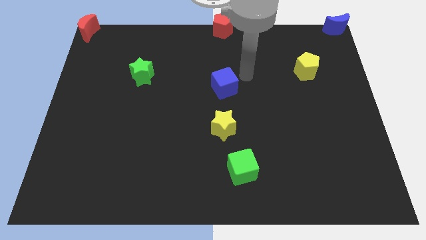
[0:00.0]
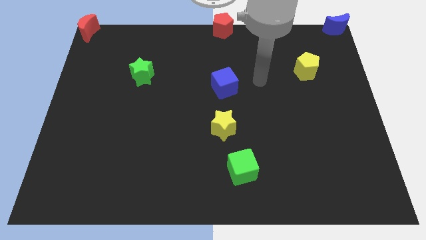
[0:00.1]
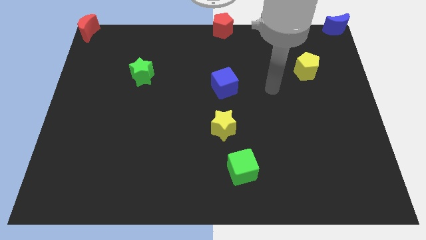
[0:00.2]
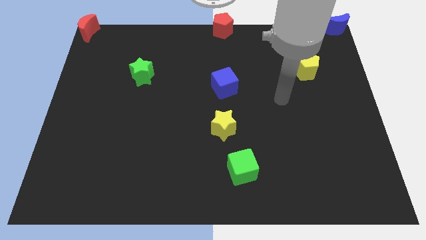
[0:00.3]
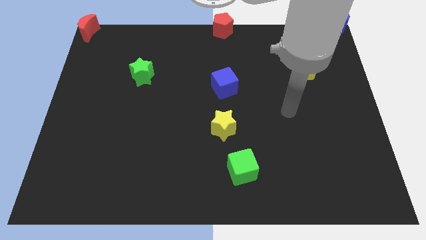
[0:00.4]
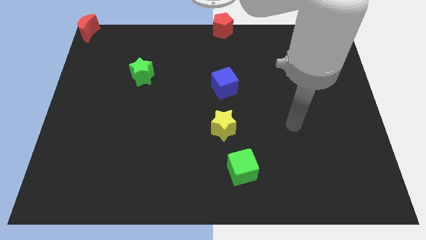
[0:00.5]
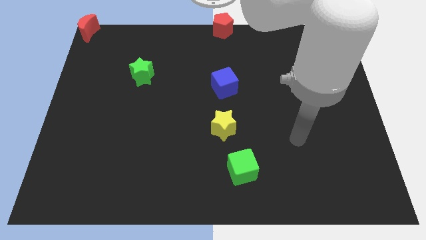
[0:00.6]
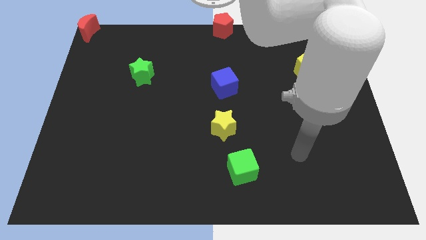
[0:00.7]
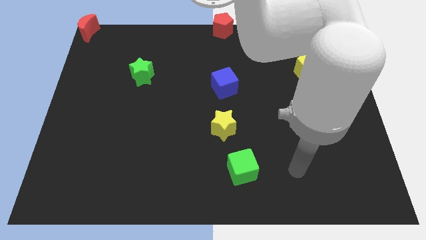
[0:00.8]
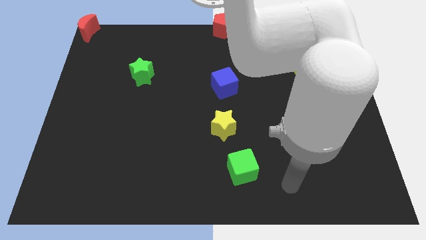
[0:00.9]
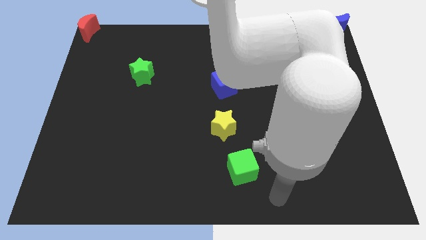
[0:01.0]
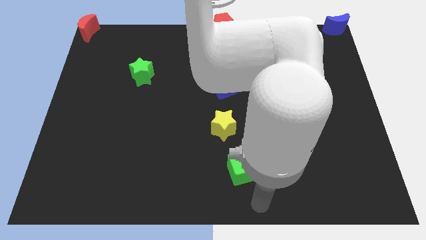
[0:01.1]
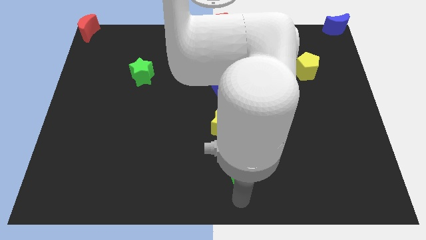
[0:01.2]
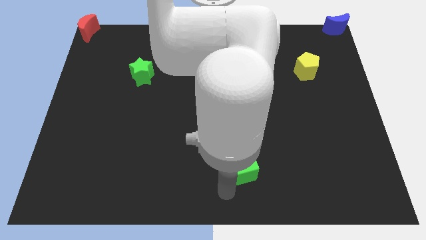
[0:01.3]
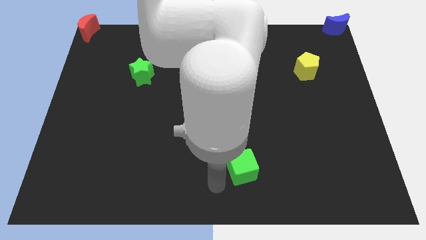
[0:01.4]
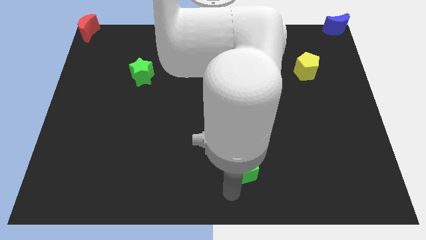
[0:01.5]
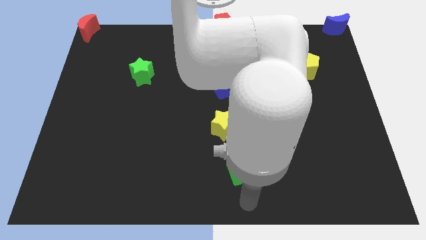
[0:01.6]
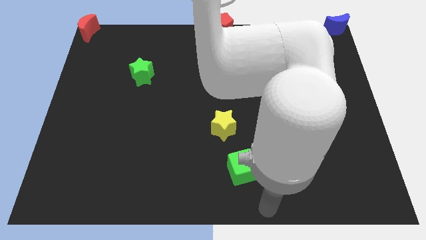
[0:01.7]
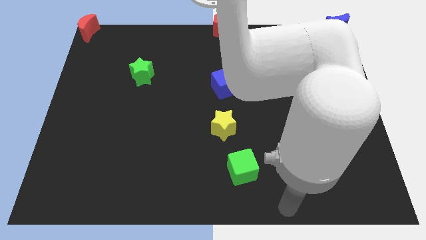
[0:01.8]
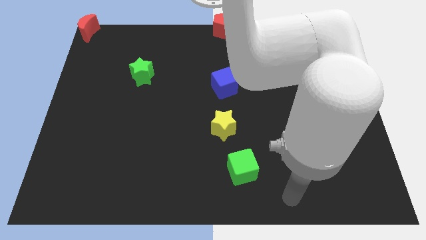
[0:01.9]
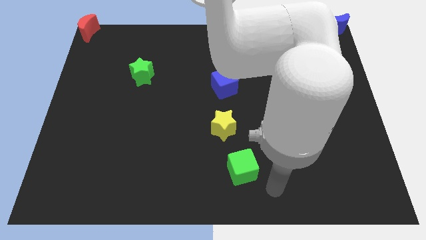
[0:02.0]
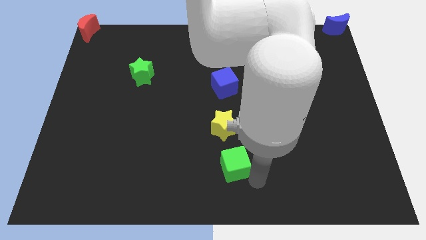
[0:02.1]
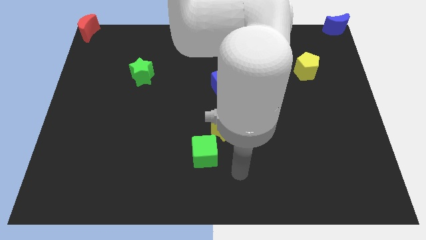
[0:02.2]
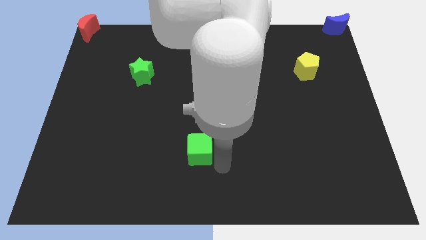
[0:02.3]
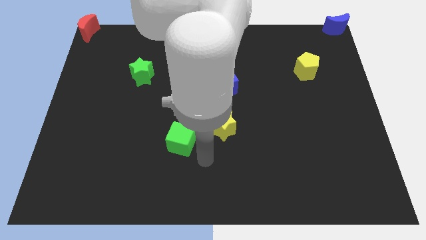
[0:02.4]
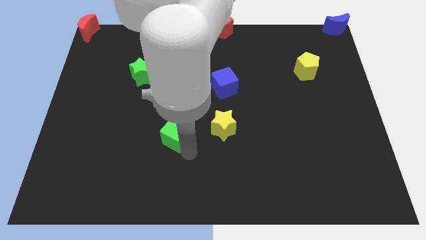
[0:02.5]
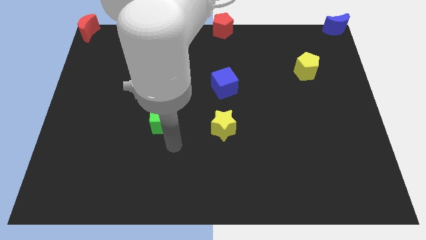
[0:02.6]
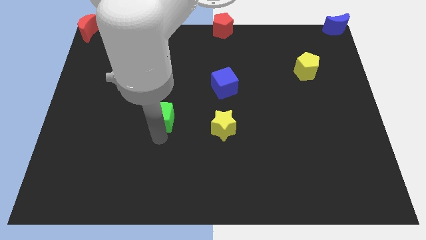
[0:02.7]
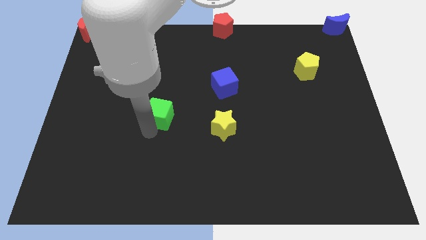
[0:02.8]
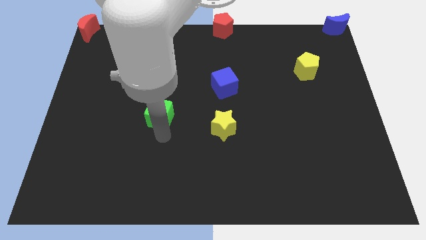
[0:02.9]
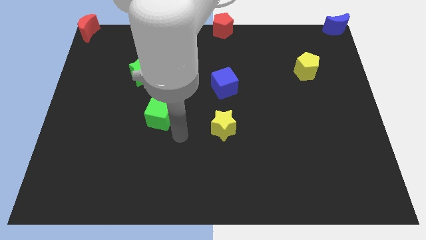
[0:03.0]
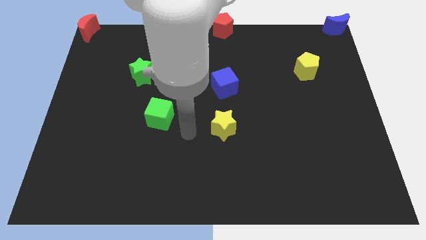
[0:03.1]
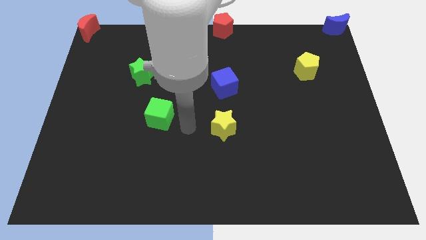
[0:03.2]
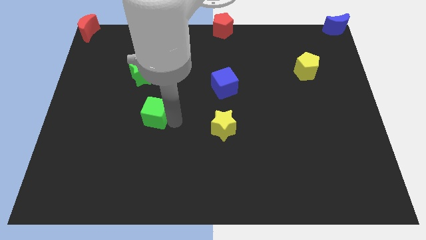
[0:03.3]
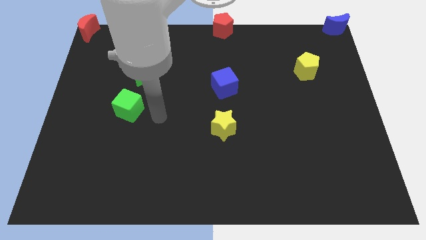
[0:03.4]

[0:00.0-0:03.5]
place the green cube at the bottom left side of green star

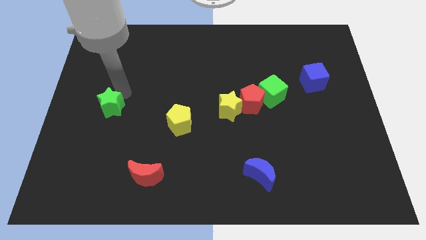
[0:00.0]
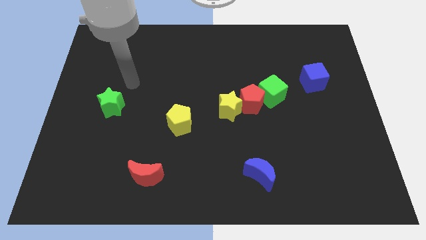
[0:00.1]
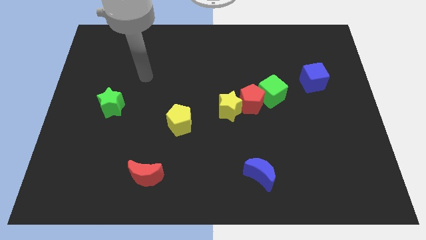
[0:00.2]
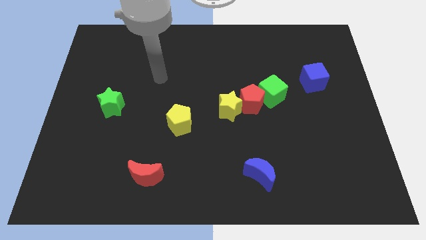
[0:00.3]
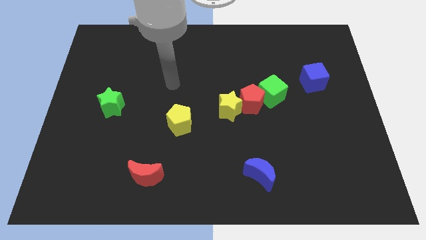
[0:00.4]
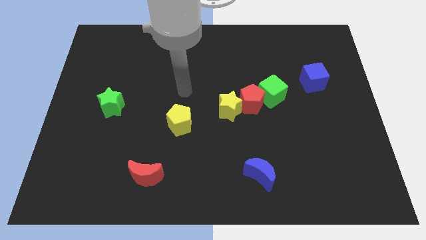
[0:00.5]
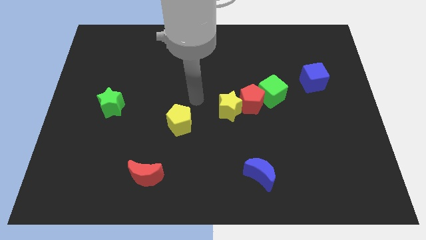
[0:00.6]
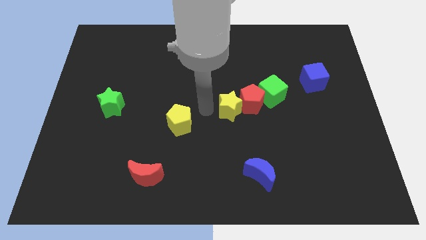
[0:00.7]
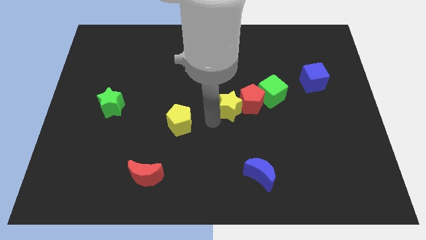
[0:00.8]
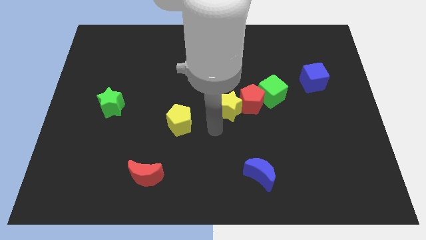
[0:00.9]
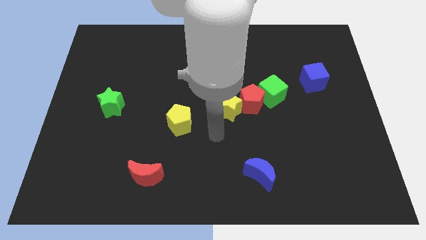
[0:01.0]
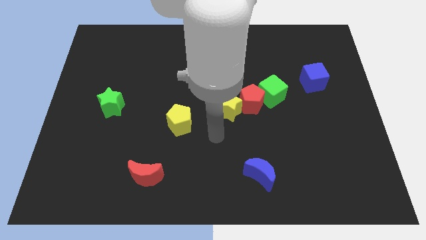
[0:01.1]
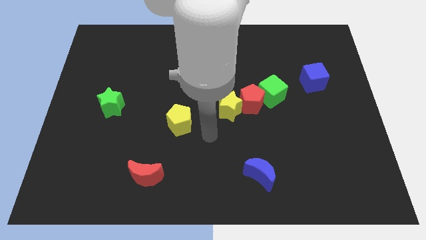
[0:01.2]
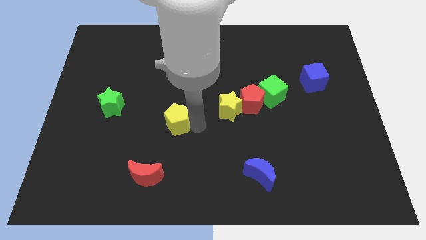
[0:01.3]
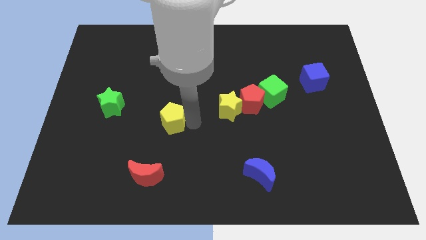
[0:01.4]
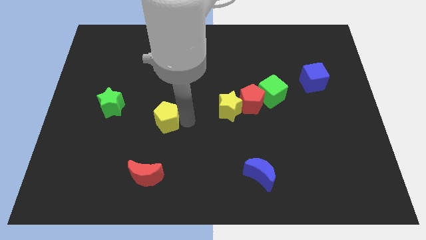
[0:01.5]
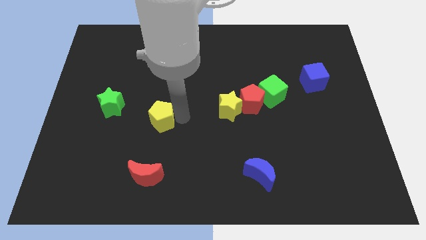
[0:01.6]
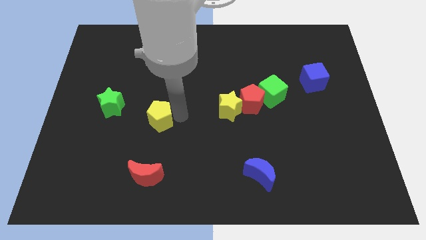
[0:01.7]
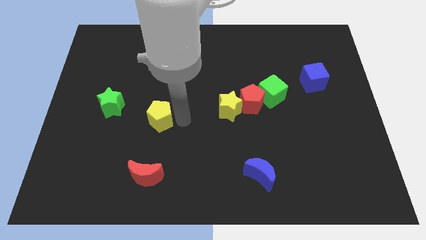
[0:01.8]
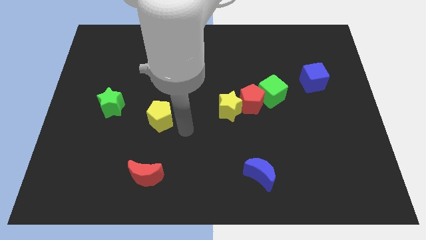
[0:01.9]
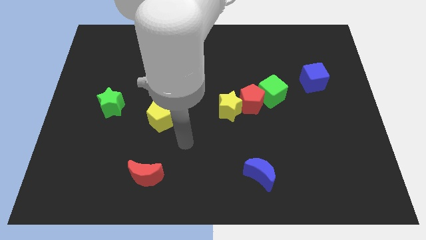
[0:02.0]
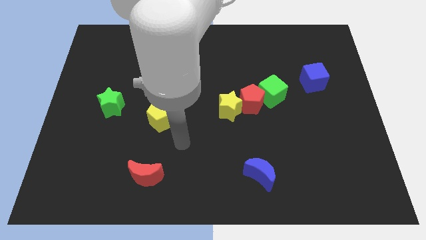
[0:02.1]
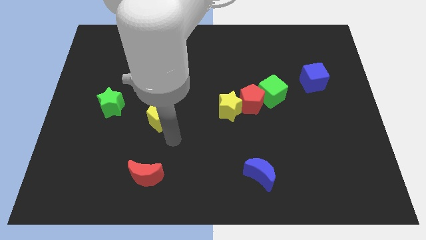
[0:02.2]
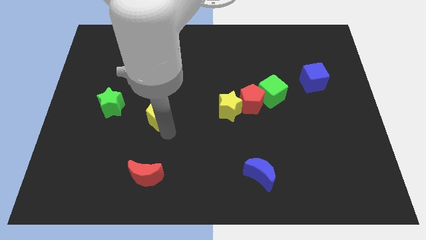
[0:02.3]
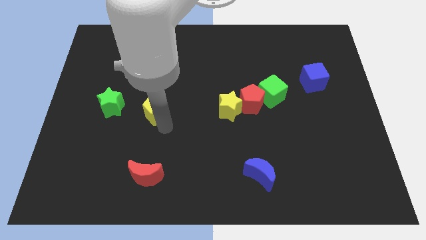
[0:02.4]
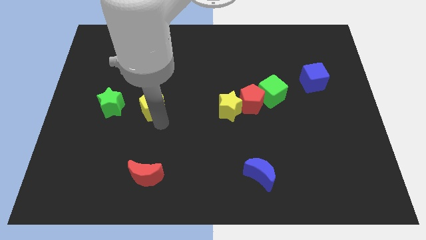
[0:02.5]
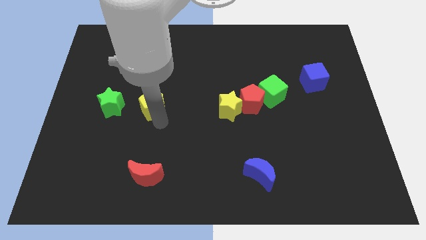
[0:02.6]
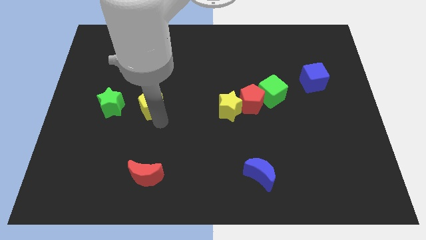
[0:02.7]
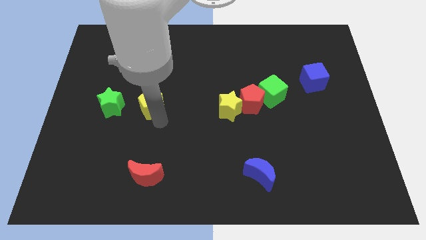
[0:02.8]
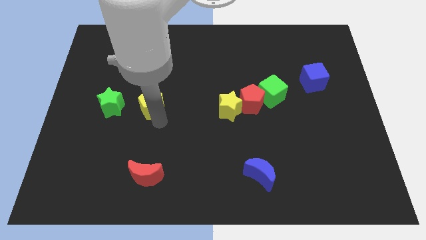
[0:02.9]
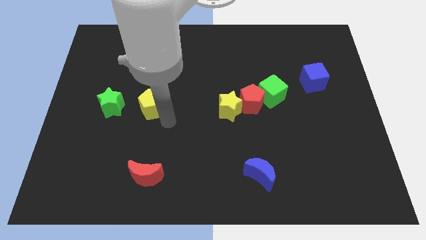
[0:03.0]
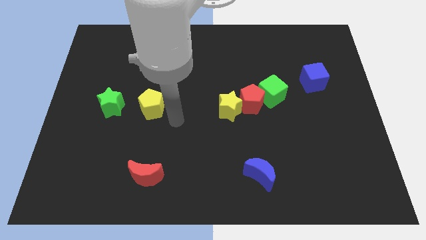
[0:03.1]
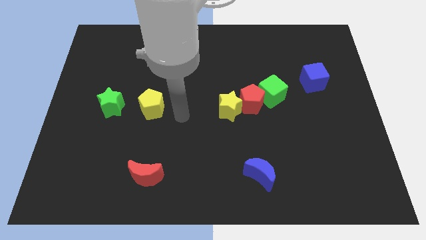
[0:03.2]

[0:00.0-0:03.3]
put the yellow pentagon on the top of the red crescent vertically

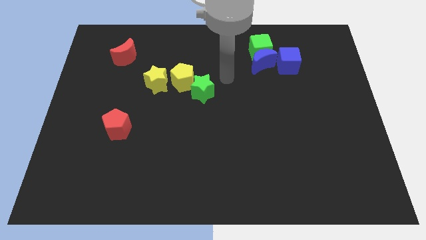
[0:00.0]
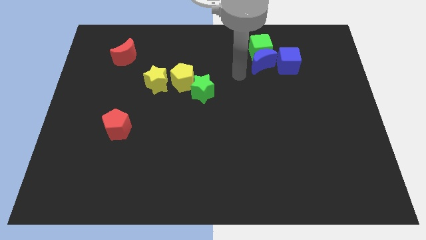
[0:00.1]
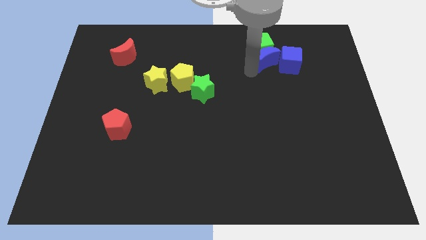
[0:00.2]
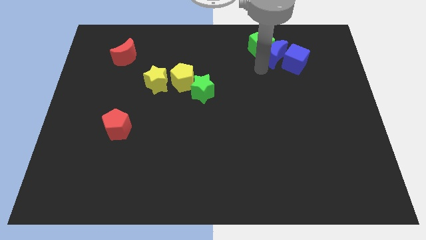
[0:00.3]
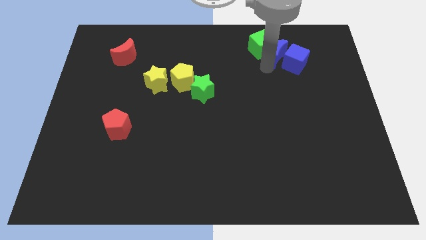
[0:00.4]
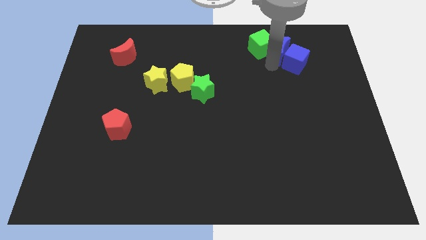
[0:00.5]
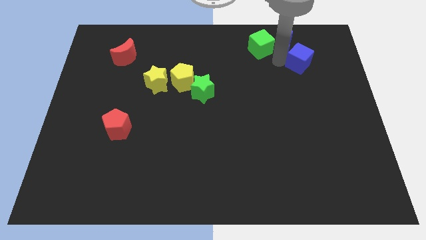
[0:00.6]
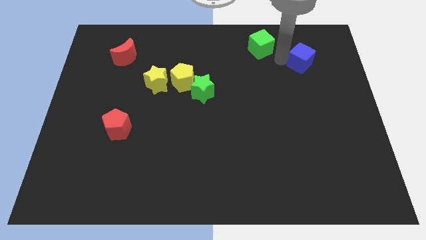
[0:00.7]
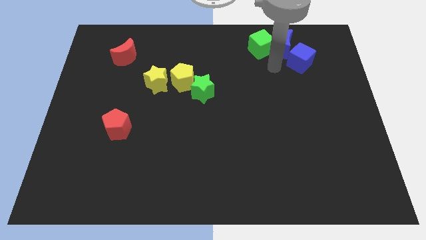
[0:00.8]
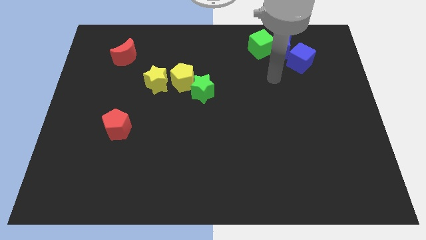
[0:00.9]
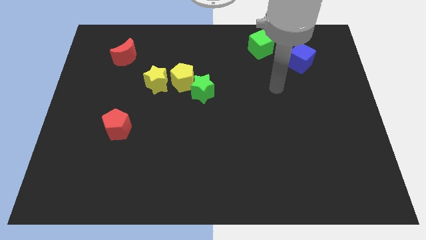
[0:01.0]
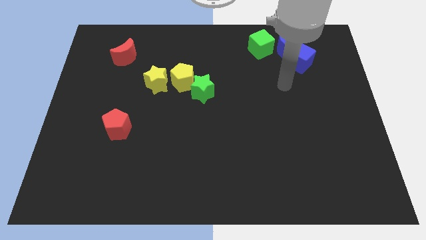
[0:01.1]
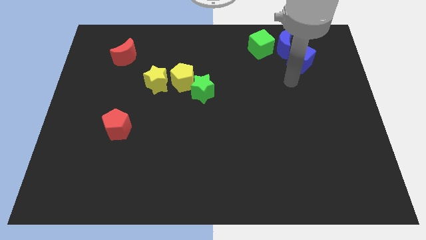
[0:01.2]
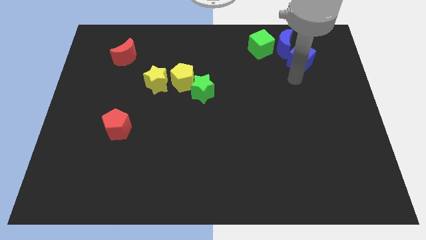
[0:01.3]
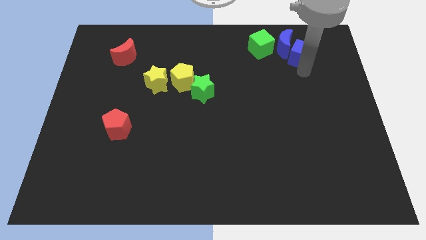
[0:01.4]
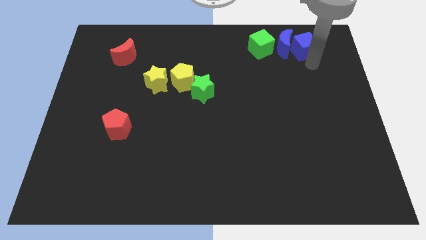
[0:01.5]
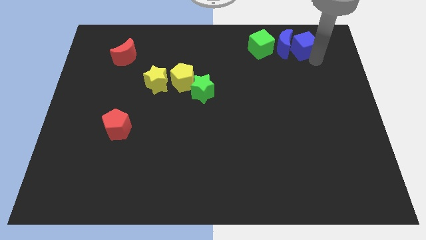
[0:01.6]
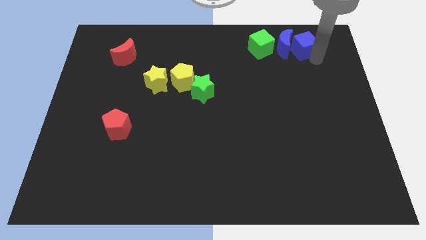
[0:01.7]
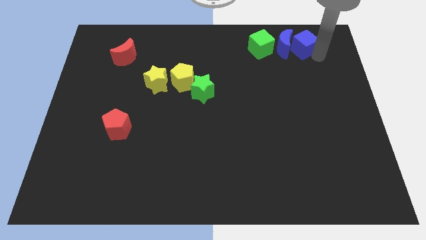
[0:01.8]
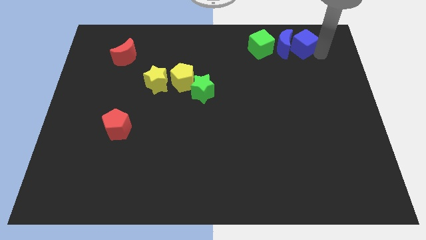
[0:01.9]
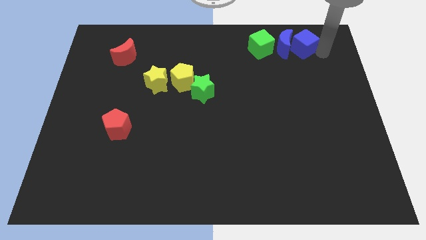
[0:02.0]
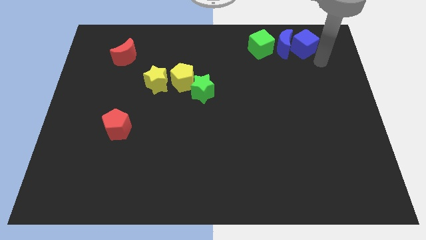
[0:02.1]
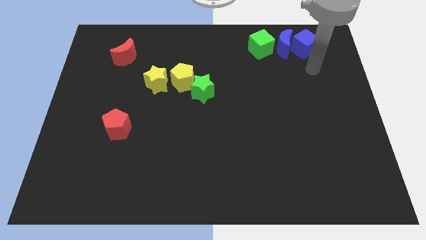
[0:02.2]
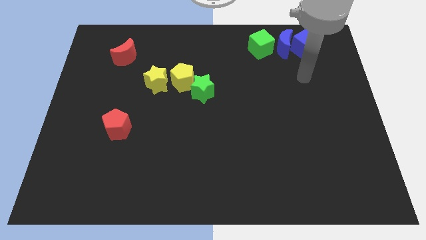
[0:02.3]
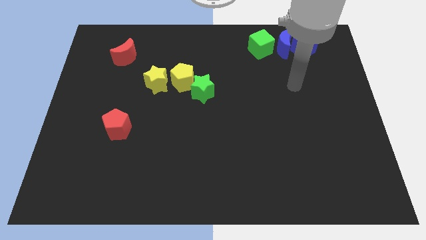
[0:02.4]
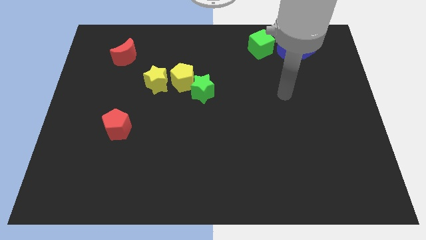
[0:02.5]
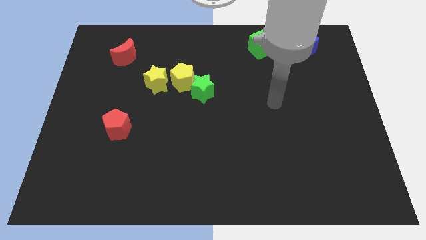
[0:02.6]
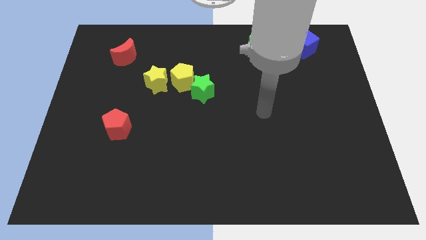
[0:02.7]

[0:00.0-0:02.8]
move the blue blocks to the right of the green cube to form a horizontal line
